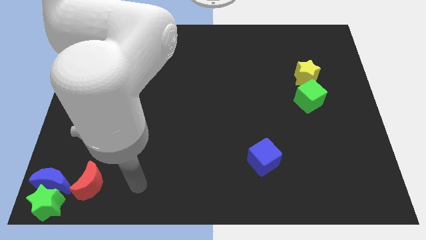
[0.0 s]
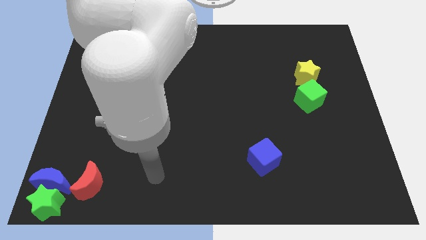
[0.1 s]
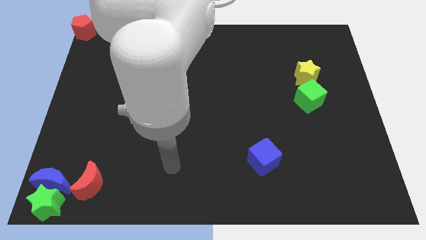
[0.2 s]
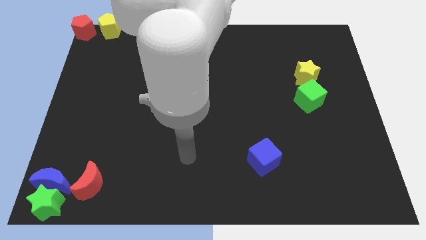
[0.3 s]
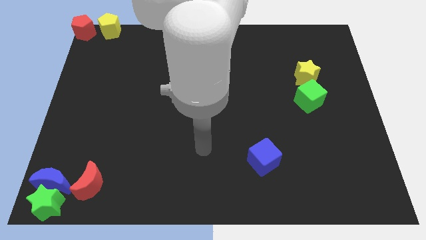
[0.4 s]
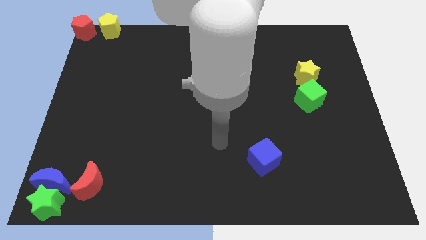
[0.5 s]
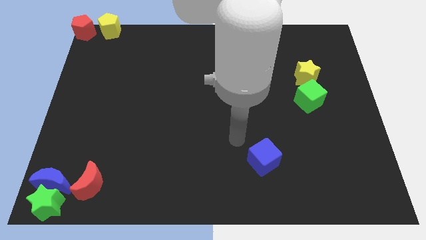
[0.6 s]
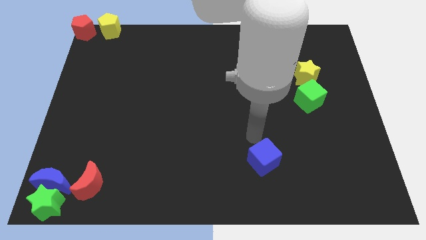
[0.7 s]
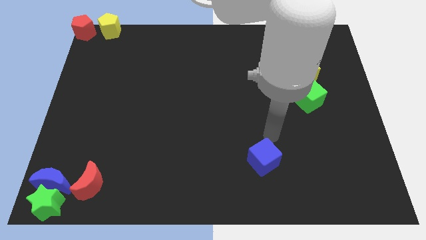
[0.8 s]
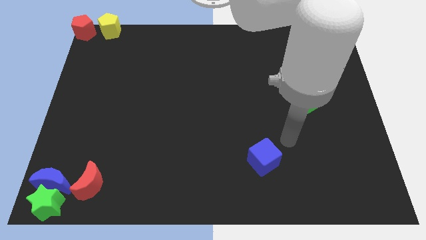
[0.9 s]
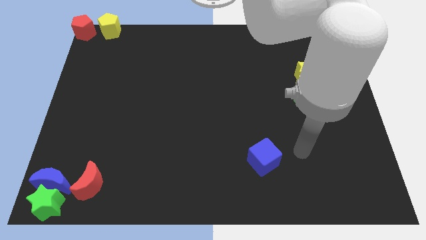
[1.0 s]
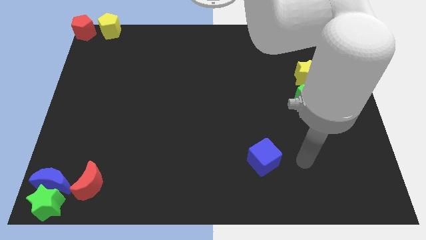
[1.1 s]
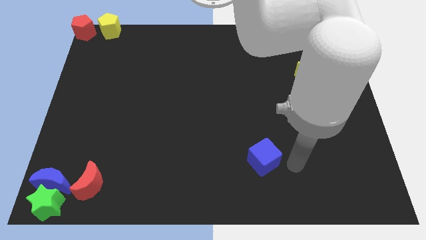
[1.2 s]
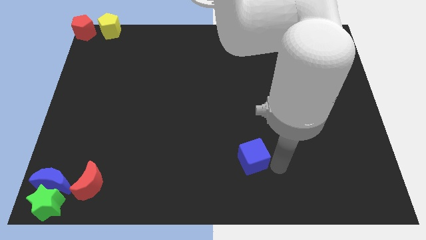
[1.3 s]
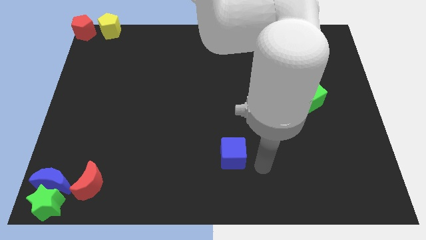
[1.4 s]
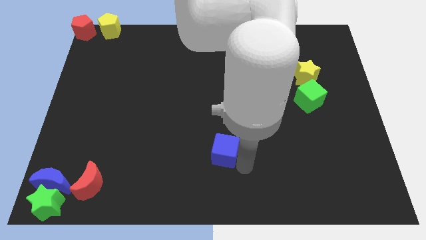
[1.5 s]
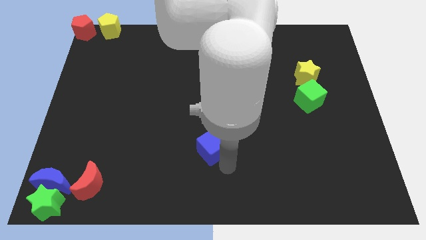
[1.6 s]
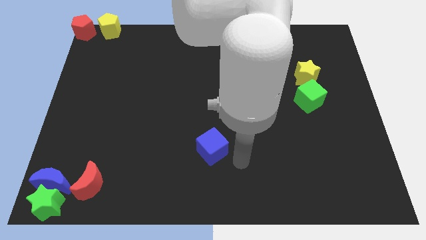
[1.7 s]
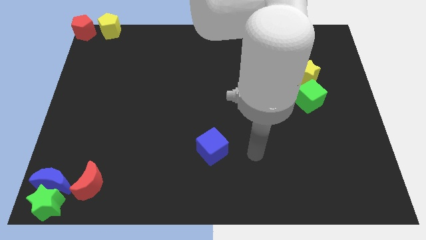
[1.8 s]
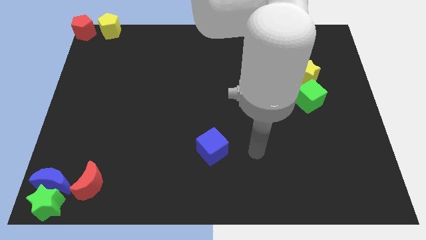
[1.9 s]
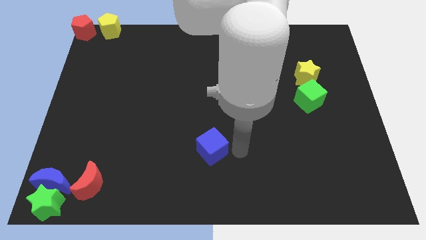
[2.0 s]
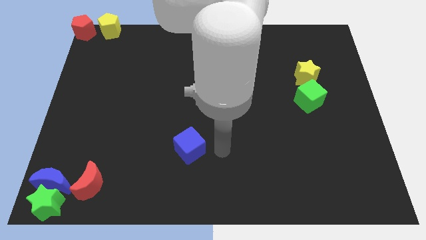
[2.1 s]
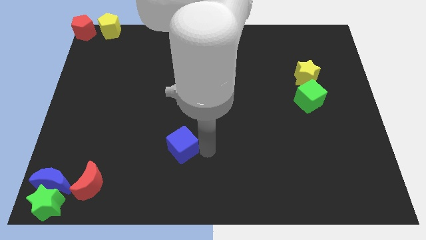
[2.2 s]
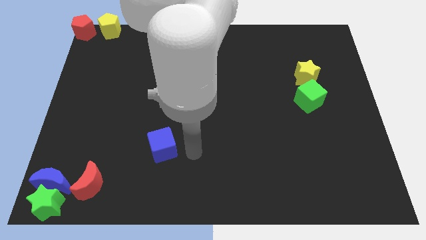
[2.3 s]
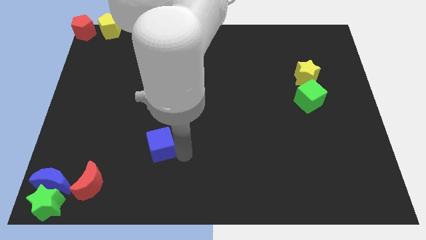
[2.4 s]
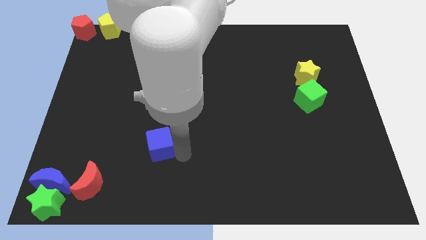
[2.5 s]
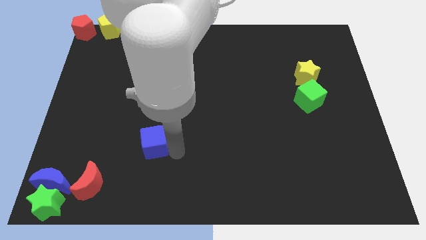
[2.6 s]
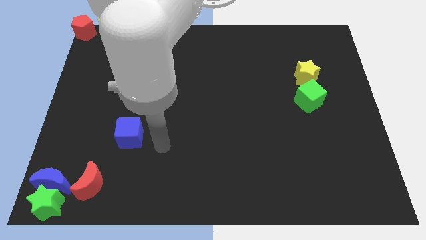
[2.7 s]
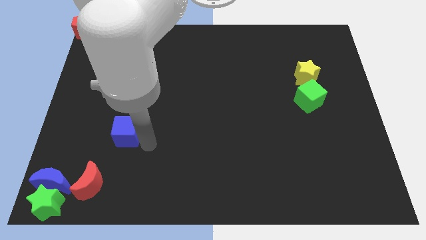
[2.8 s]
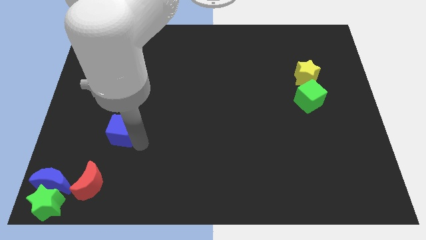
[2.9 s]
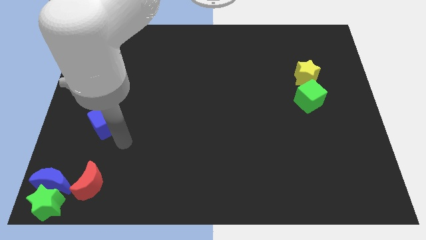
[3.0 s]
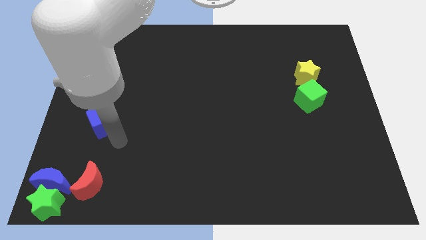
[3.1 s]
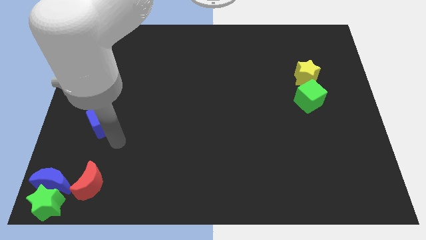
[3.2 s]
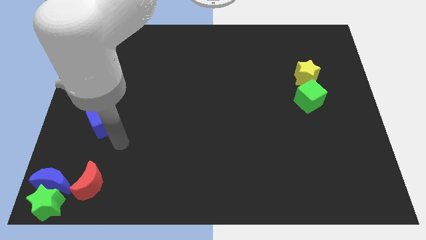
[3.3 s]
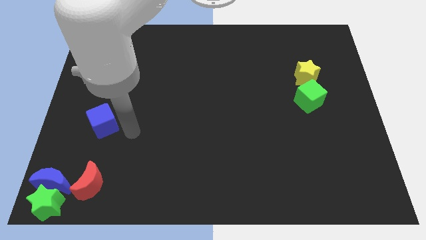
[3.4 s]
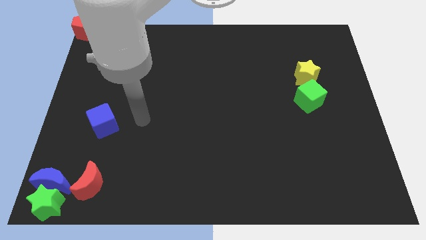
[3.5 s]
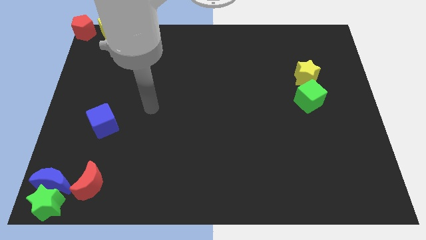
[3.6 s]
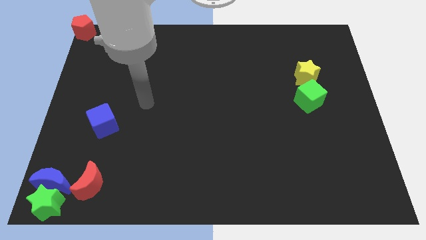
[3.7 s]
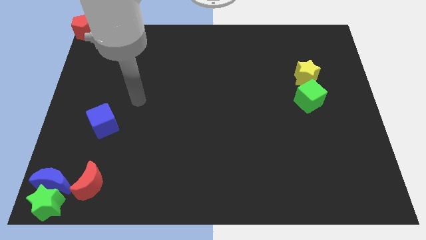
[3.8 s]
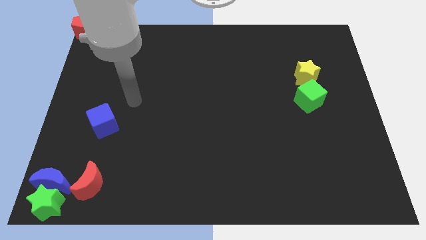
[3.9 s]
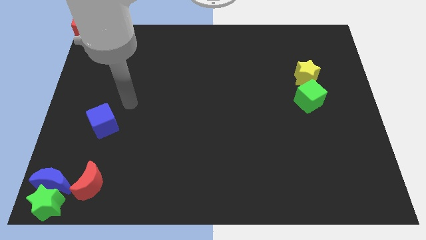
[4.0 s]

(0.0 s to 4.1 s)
put the blue cube vertically above the red moon

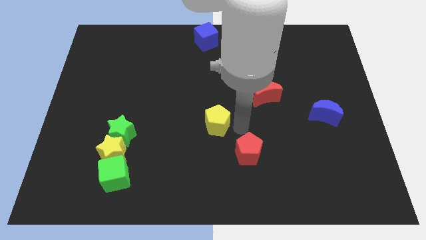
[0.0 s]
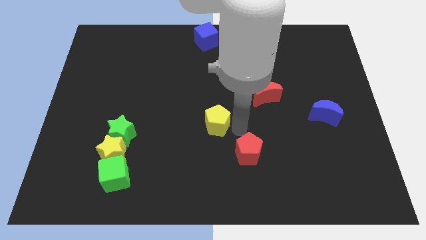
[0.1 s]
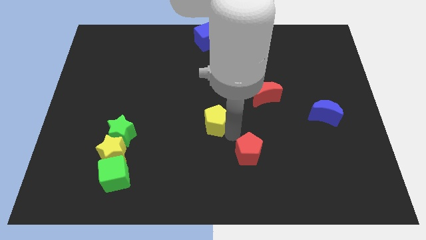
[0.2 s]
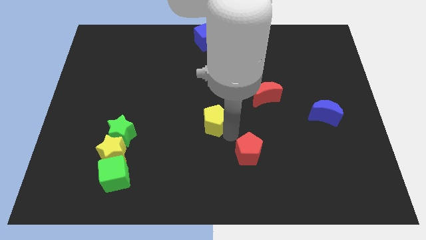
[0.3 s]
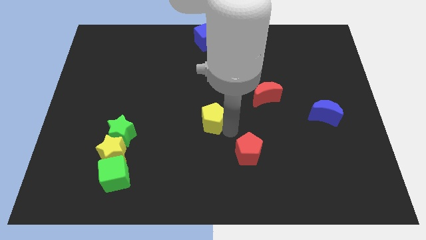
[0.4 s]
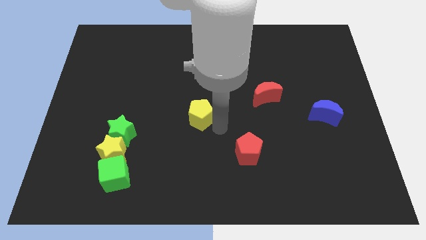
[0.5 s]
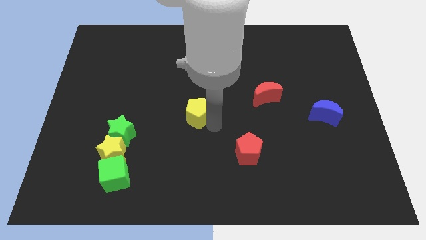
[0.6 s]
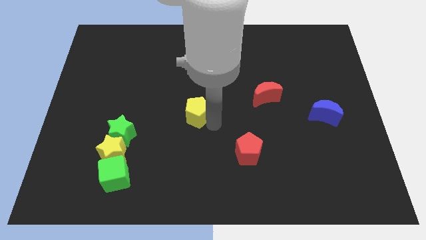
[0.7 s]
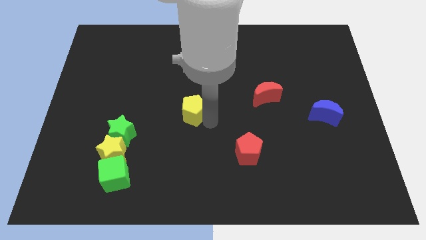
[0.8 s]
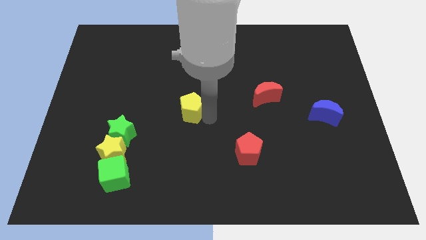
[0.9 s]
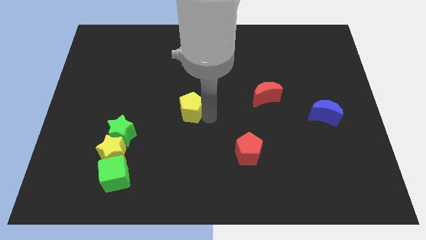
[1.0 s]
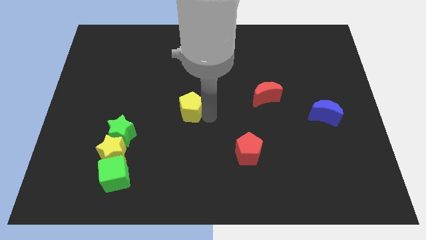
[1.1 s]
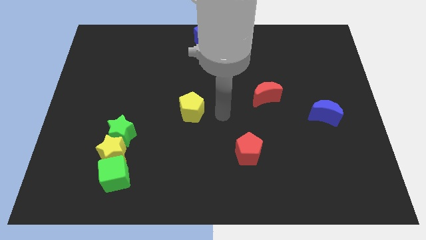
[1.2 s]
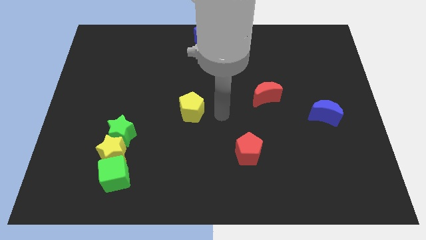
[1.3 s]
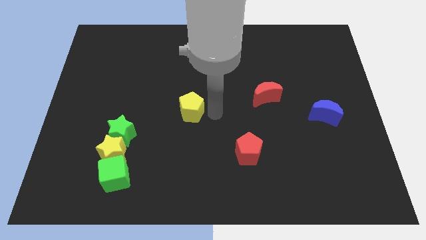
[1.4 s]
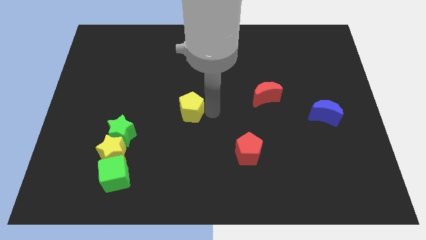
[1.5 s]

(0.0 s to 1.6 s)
move the yellow pentagon in between green star and red crescent

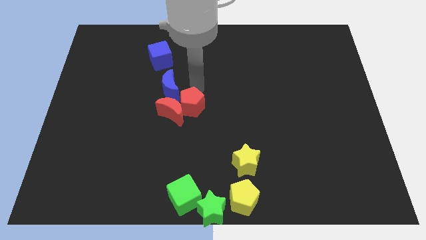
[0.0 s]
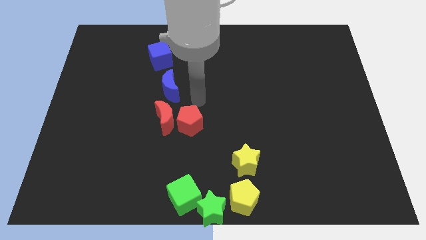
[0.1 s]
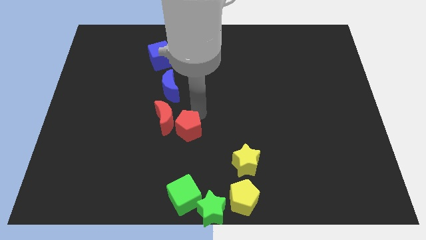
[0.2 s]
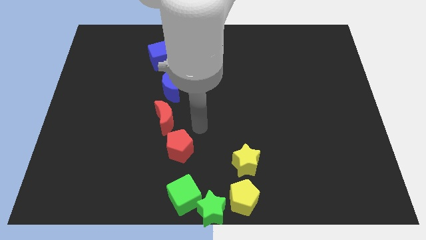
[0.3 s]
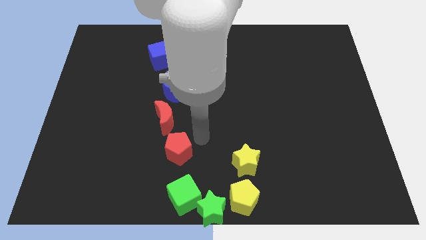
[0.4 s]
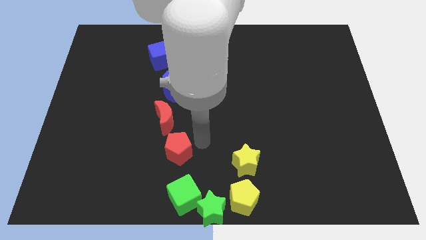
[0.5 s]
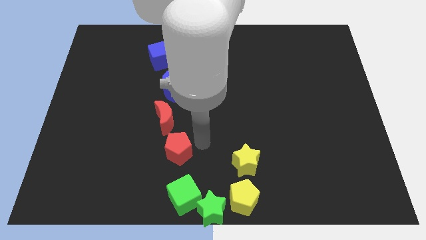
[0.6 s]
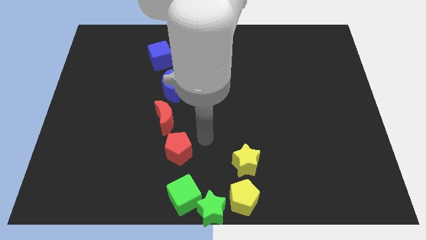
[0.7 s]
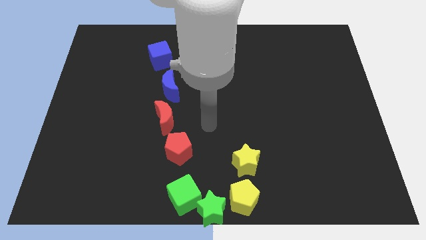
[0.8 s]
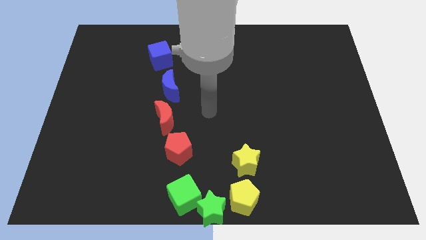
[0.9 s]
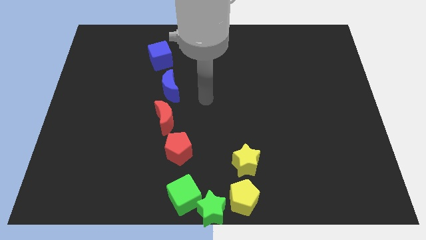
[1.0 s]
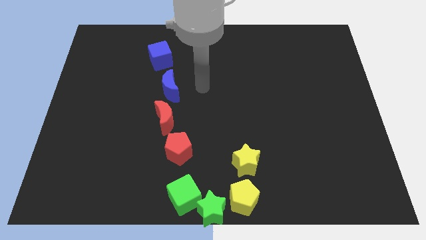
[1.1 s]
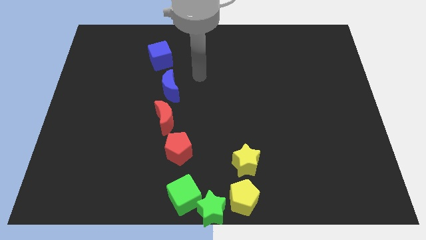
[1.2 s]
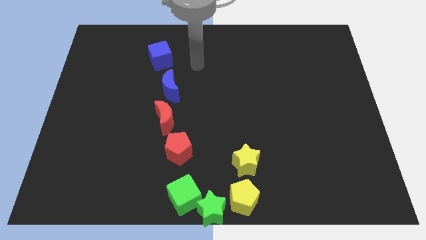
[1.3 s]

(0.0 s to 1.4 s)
push the red pentagon in between red crescent and green cube

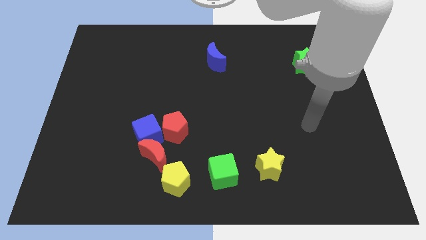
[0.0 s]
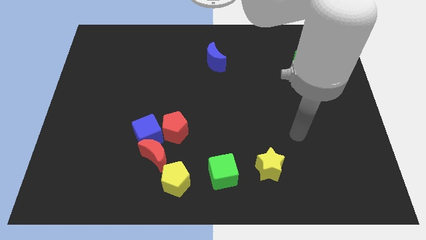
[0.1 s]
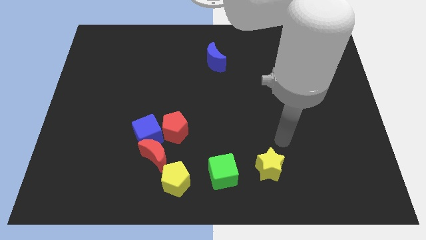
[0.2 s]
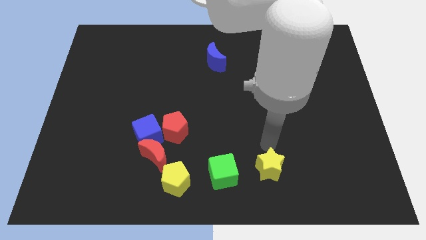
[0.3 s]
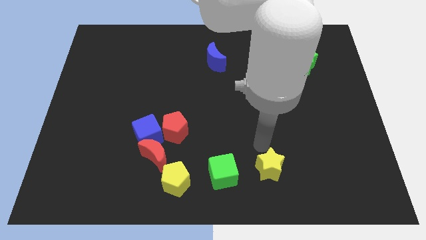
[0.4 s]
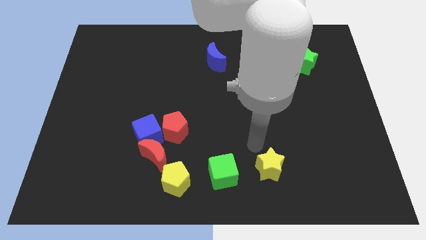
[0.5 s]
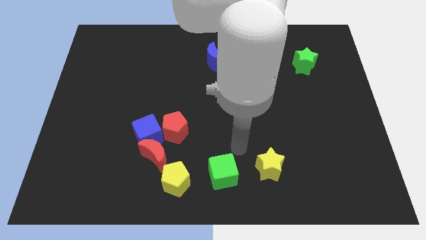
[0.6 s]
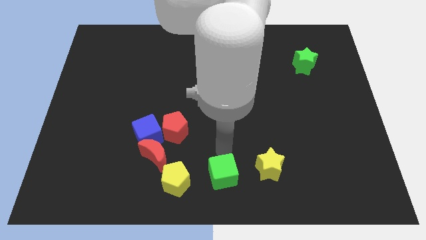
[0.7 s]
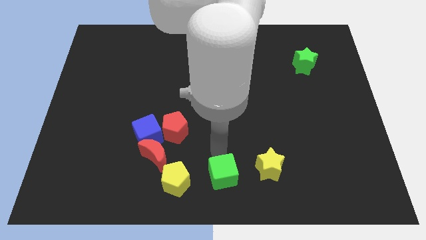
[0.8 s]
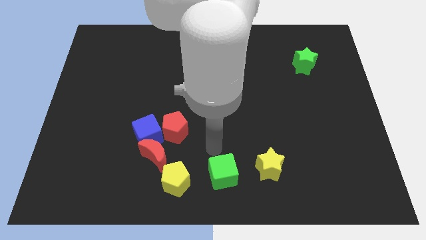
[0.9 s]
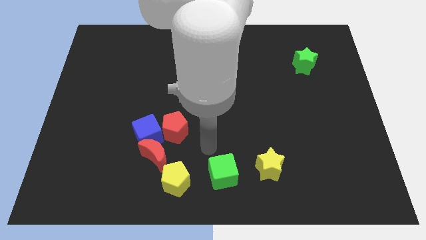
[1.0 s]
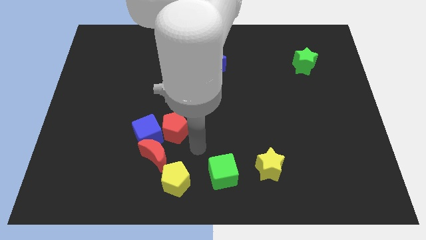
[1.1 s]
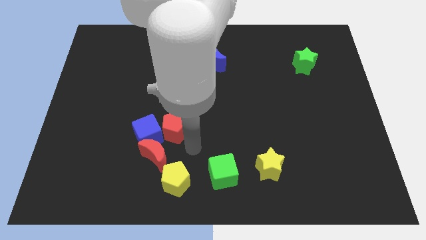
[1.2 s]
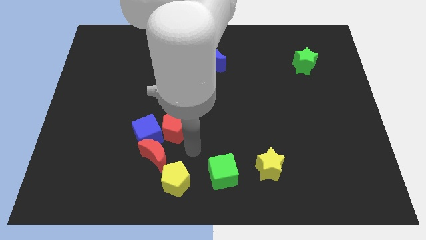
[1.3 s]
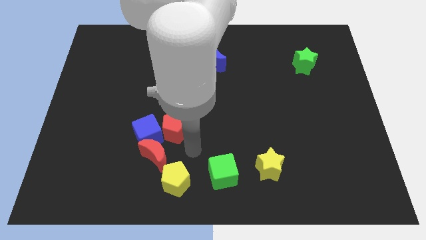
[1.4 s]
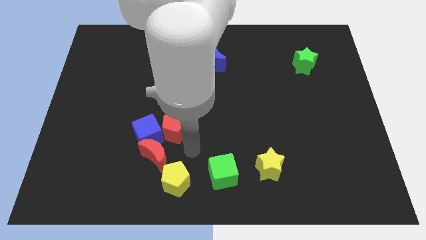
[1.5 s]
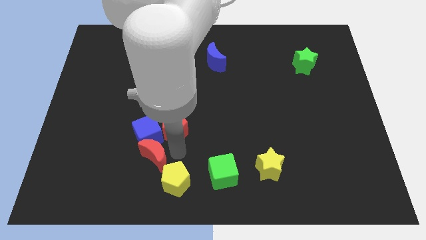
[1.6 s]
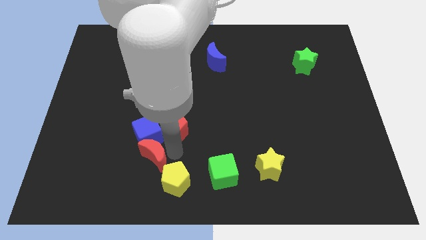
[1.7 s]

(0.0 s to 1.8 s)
move your arm close to the red moon
